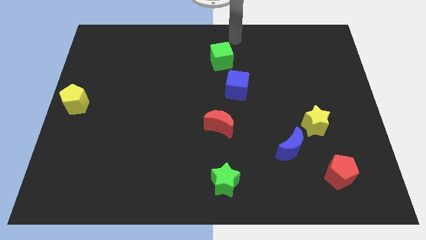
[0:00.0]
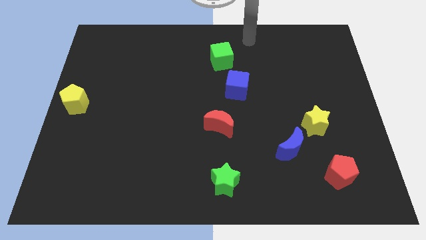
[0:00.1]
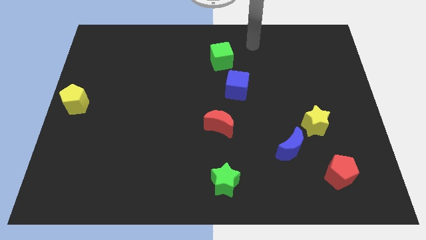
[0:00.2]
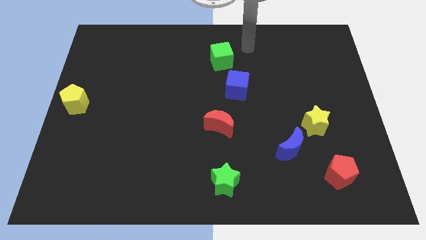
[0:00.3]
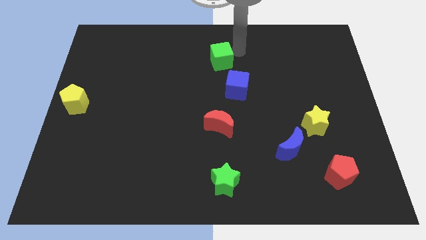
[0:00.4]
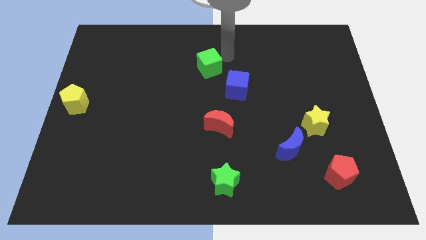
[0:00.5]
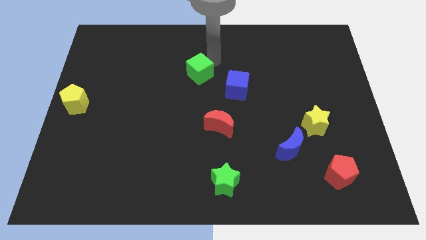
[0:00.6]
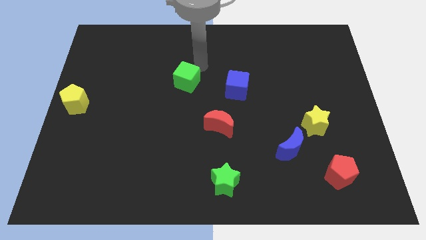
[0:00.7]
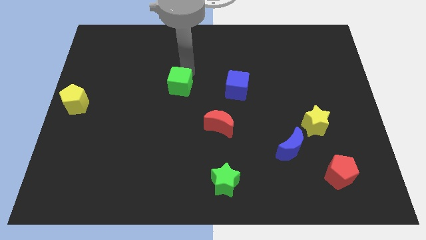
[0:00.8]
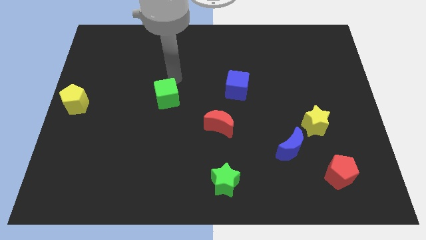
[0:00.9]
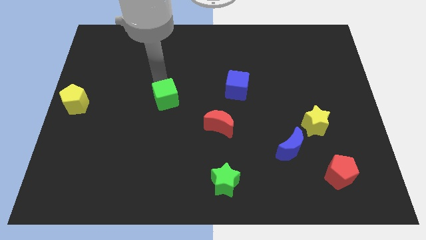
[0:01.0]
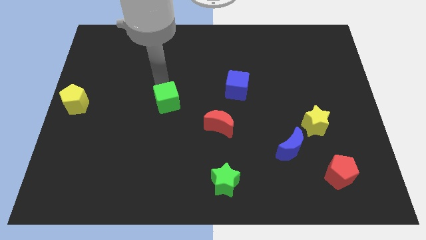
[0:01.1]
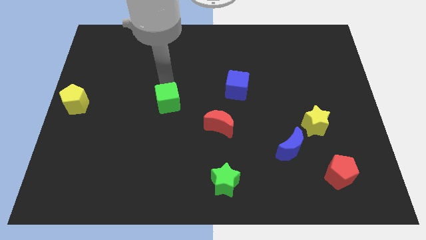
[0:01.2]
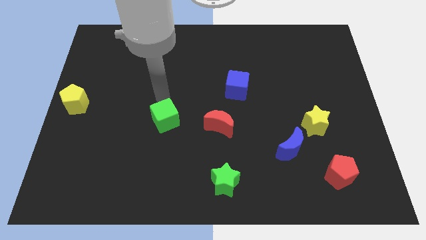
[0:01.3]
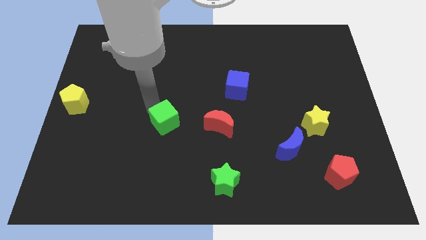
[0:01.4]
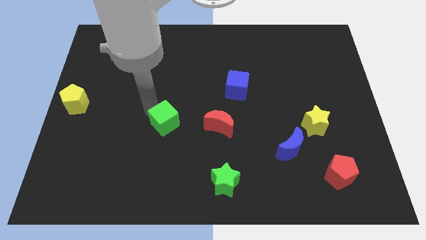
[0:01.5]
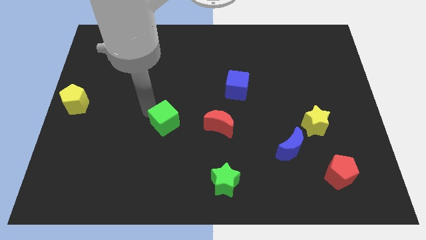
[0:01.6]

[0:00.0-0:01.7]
place the green cube parallel to the left side of the red moon

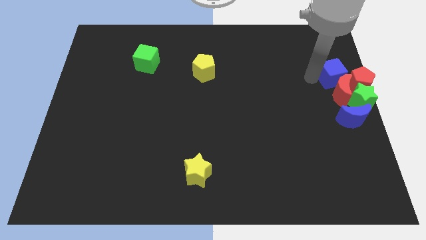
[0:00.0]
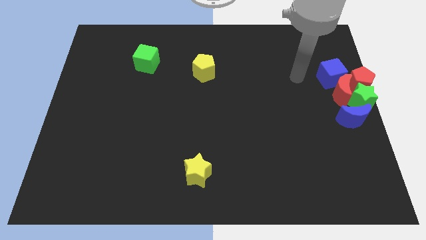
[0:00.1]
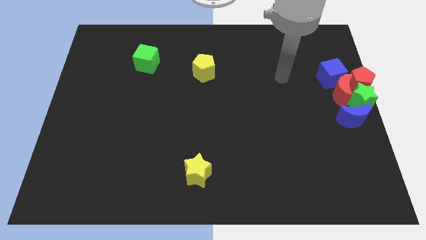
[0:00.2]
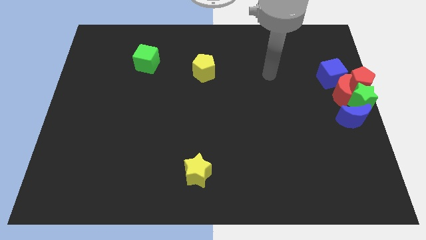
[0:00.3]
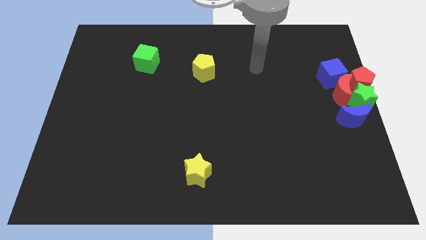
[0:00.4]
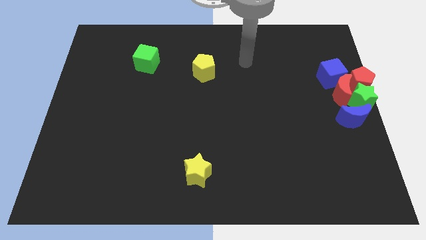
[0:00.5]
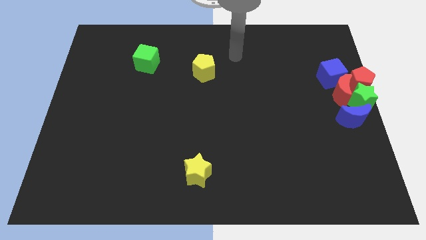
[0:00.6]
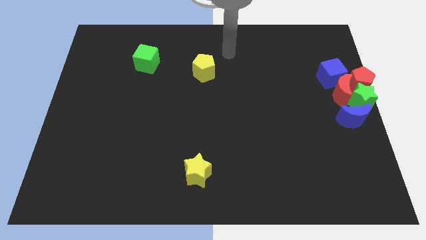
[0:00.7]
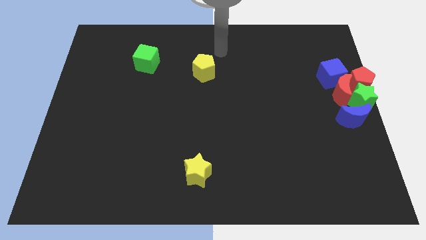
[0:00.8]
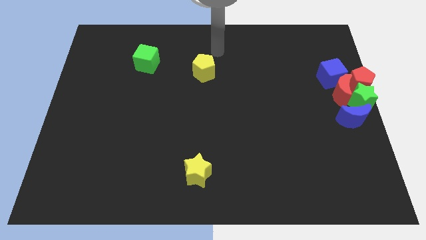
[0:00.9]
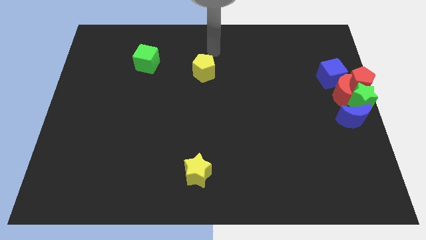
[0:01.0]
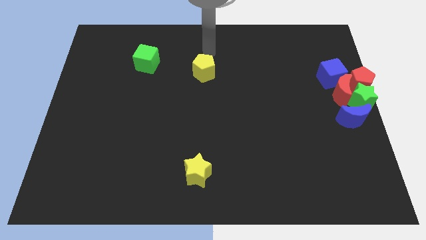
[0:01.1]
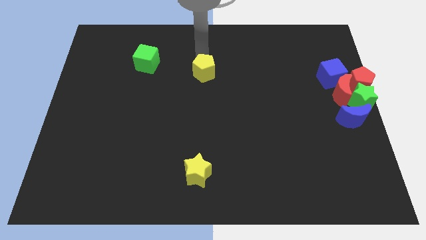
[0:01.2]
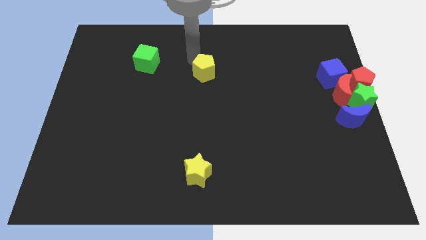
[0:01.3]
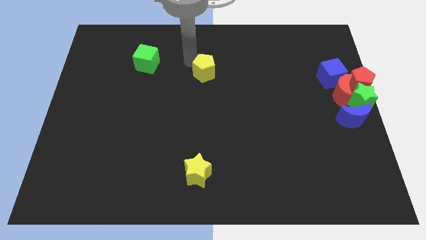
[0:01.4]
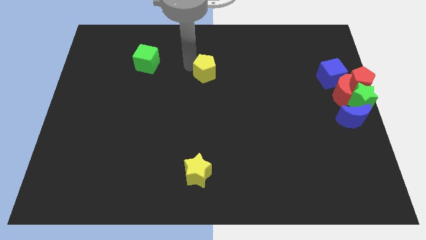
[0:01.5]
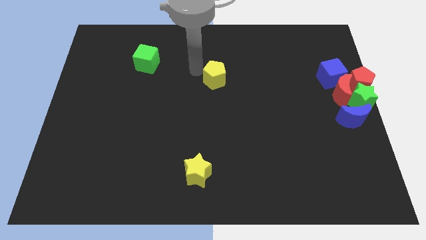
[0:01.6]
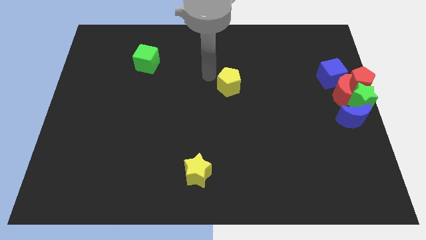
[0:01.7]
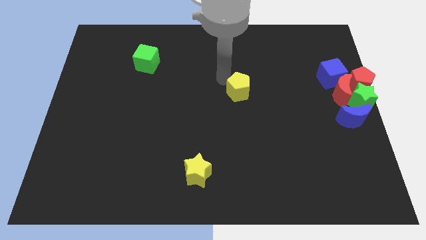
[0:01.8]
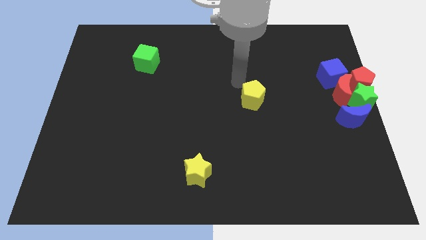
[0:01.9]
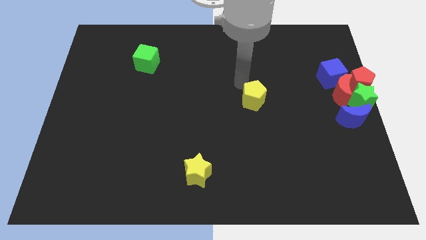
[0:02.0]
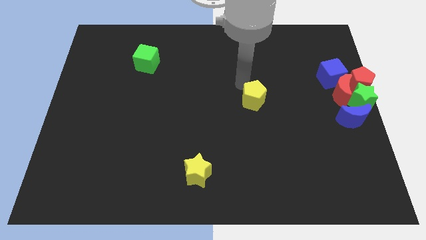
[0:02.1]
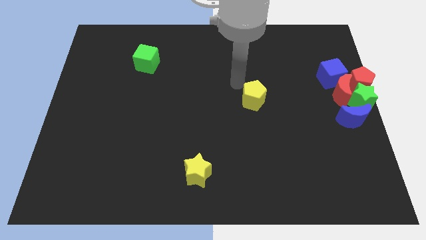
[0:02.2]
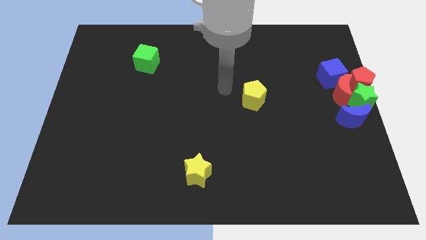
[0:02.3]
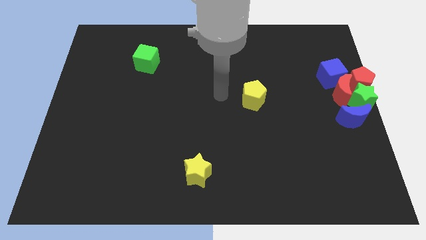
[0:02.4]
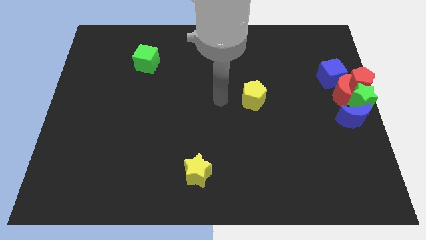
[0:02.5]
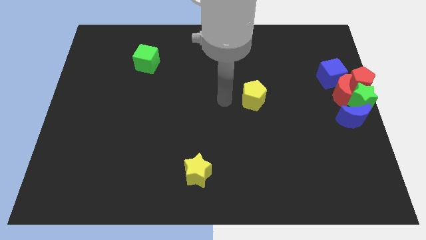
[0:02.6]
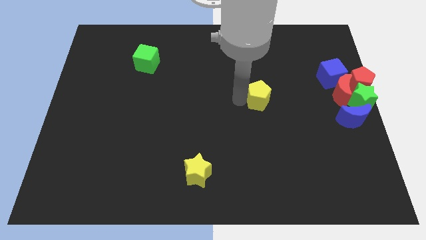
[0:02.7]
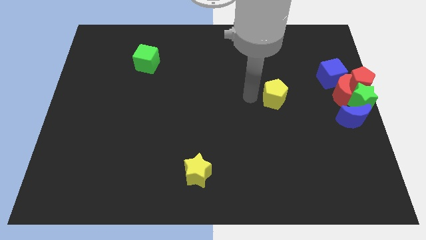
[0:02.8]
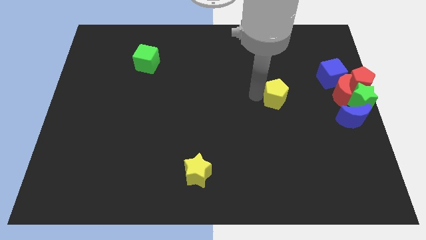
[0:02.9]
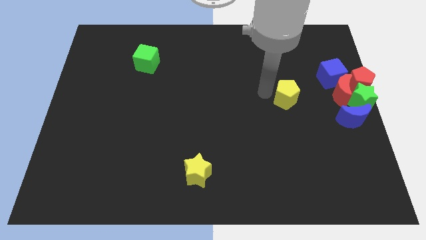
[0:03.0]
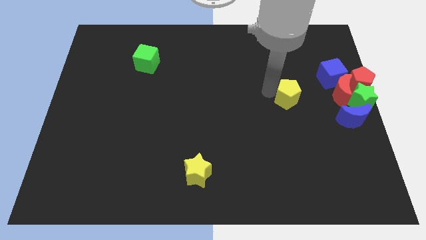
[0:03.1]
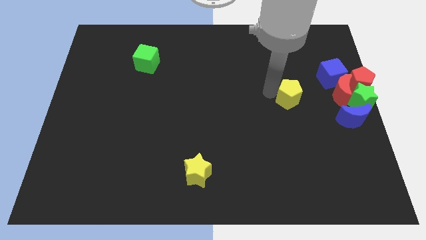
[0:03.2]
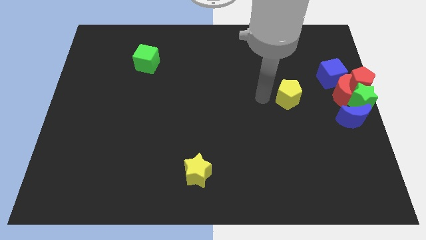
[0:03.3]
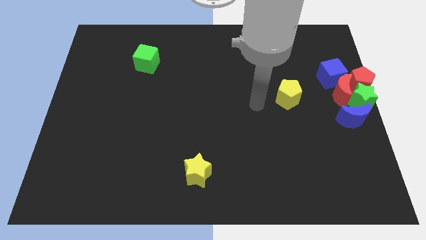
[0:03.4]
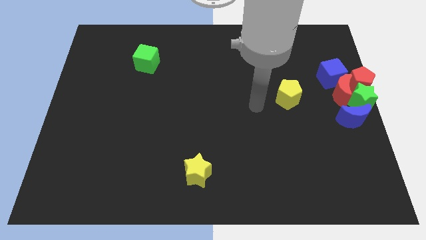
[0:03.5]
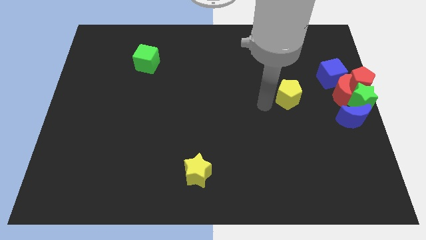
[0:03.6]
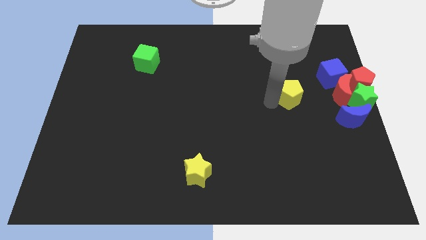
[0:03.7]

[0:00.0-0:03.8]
drag the yellow pentagon towards the group of blocks

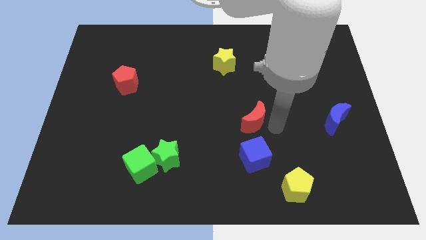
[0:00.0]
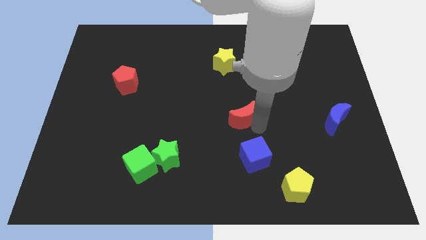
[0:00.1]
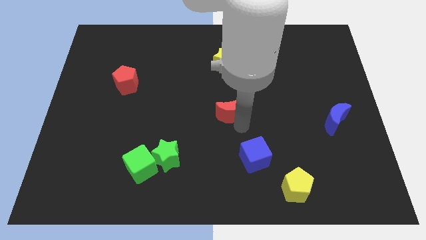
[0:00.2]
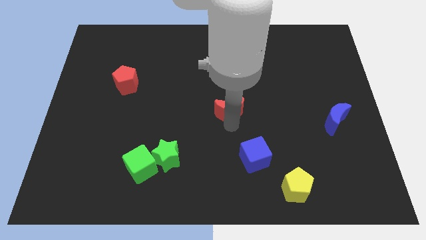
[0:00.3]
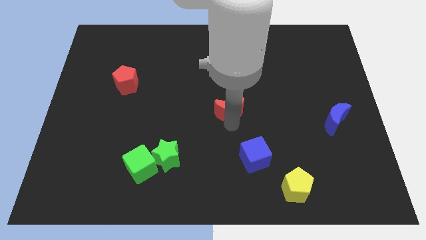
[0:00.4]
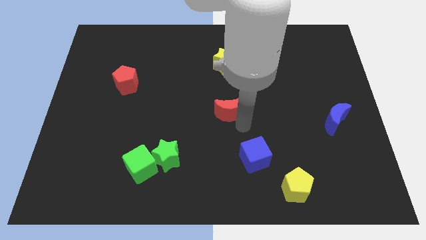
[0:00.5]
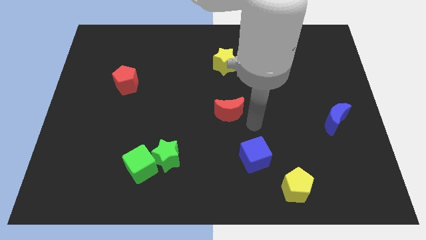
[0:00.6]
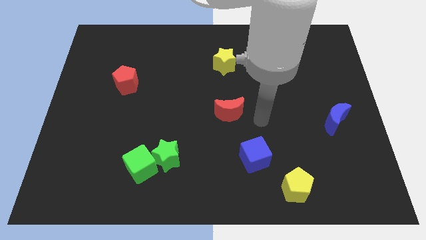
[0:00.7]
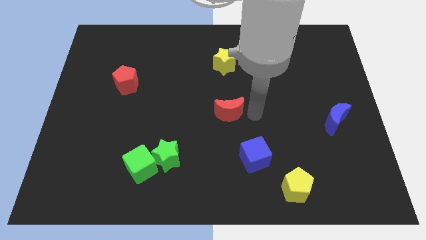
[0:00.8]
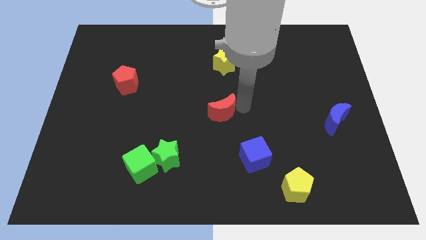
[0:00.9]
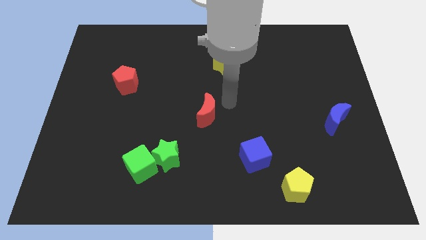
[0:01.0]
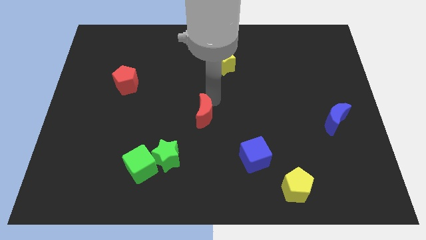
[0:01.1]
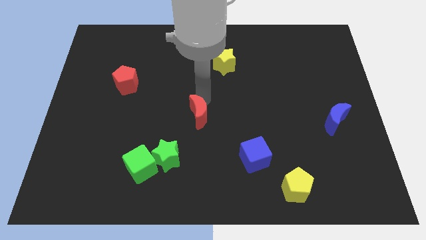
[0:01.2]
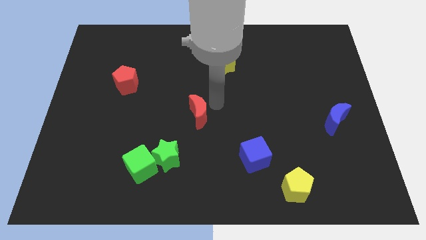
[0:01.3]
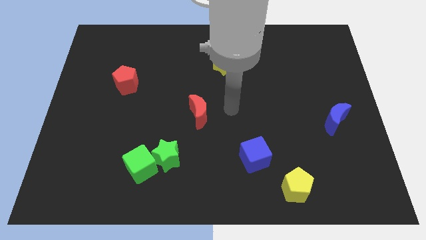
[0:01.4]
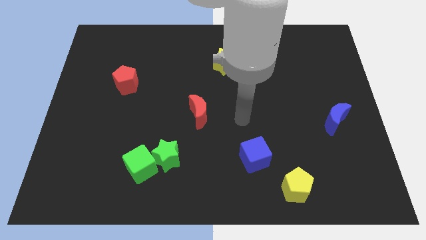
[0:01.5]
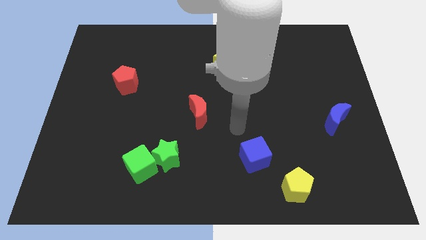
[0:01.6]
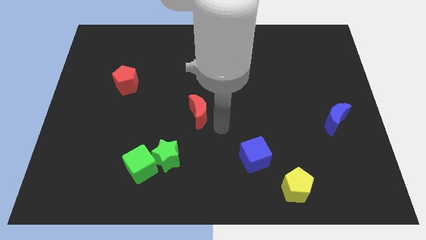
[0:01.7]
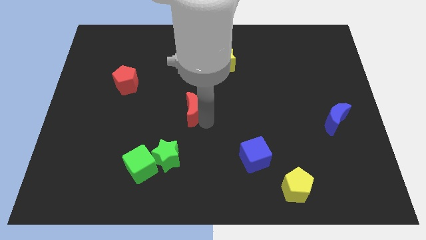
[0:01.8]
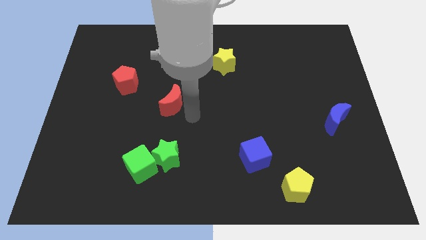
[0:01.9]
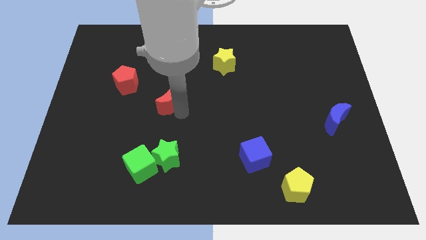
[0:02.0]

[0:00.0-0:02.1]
push the red crescent to the top of the green star

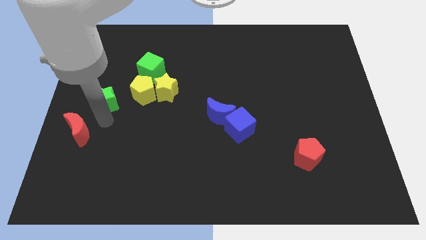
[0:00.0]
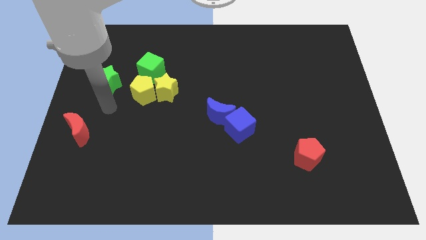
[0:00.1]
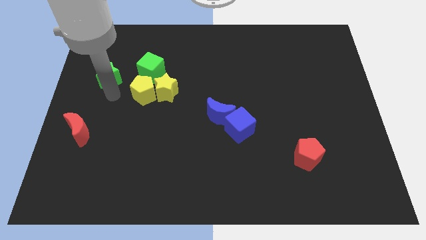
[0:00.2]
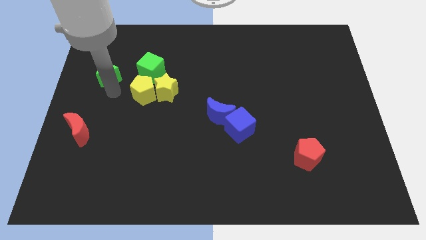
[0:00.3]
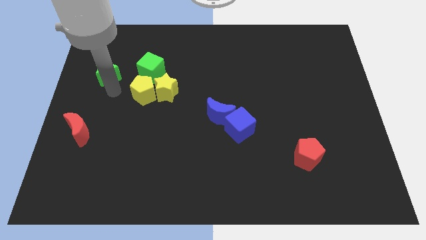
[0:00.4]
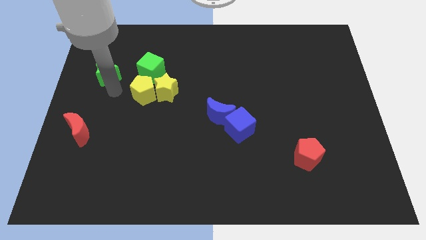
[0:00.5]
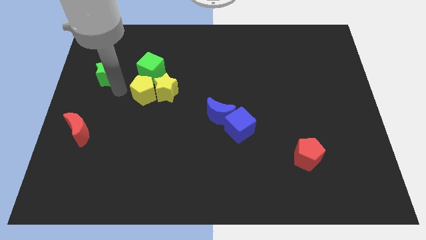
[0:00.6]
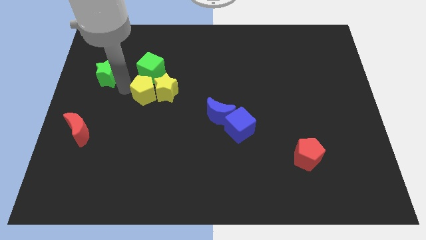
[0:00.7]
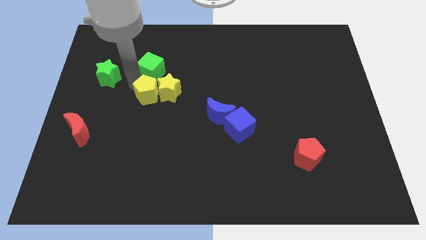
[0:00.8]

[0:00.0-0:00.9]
push the green star left to the green cube

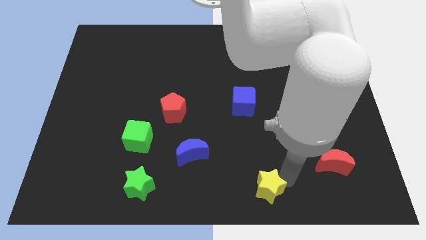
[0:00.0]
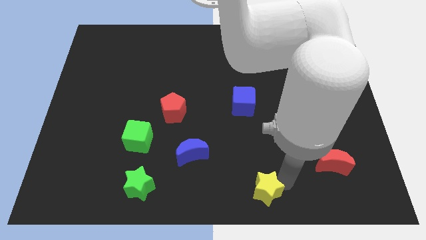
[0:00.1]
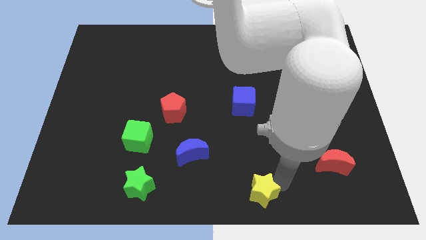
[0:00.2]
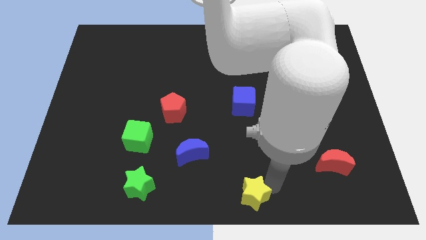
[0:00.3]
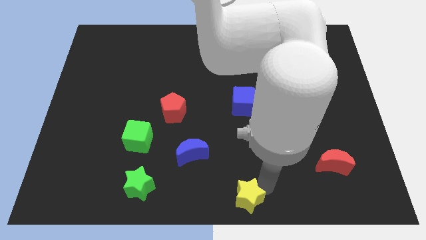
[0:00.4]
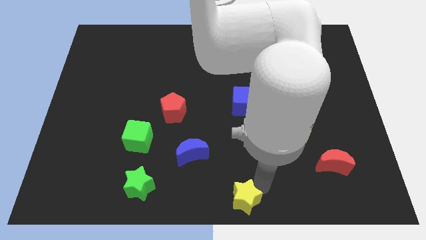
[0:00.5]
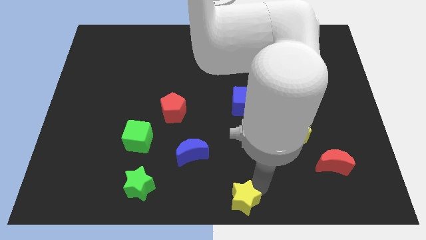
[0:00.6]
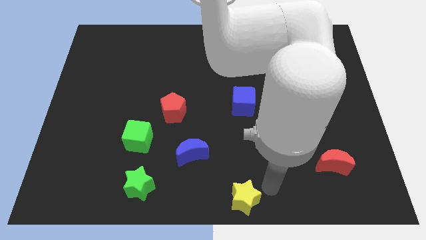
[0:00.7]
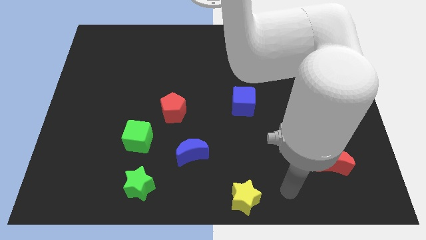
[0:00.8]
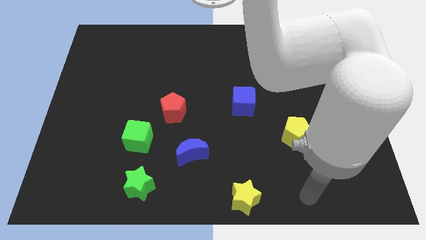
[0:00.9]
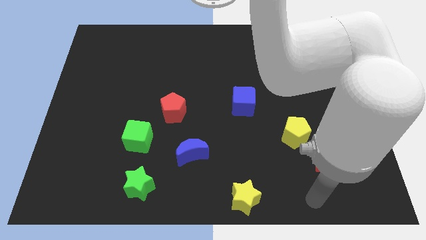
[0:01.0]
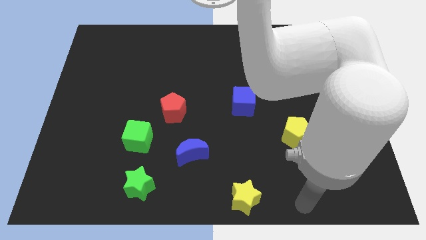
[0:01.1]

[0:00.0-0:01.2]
put the yellow star at the bottom center of the board
